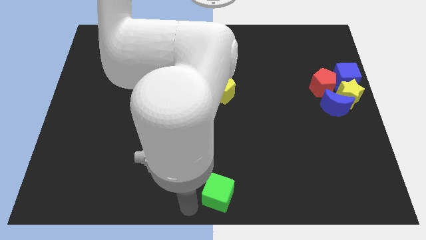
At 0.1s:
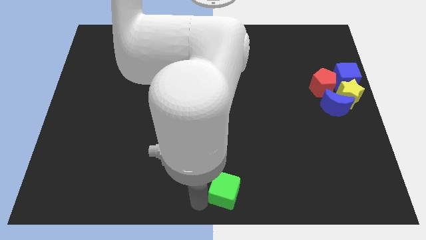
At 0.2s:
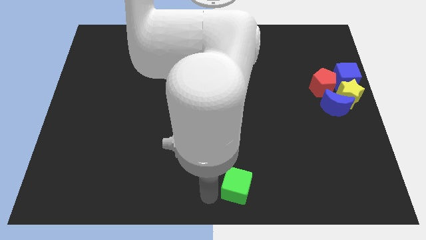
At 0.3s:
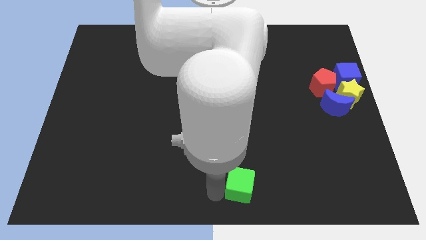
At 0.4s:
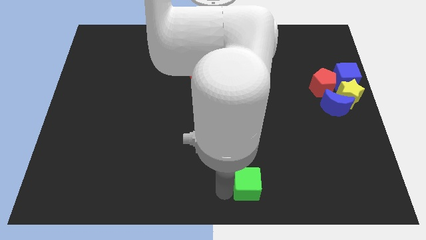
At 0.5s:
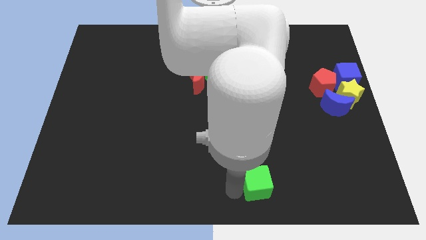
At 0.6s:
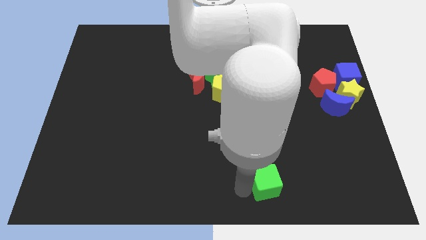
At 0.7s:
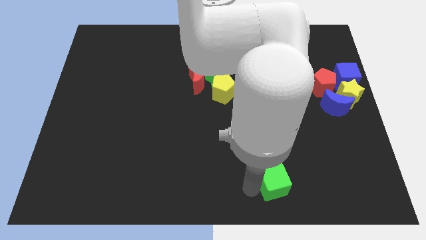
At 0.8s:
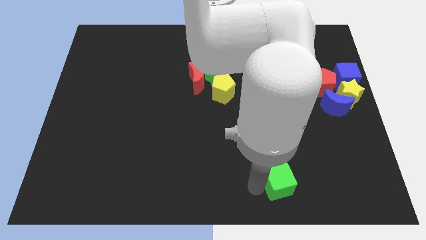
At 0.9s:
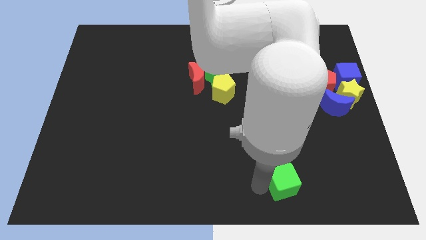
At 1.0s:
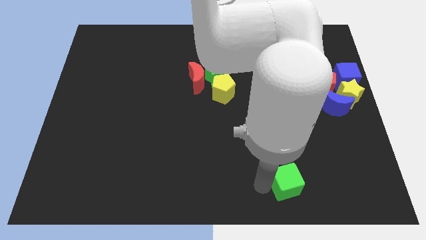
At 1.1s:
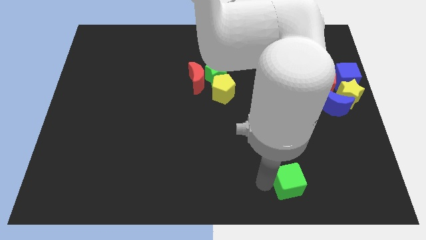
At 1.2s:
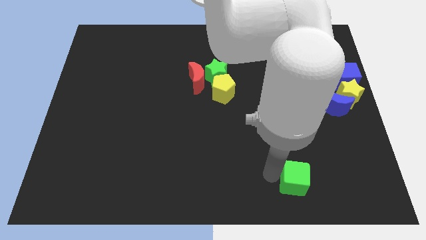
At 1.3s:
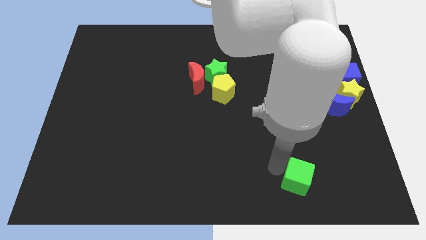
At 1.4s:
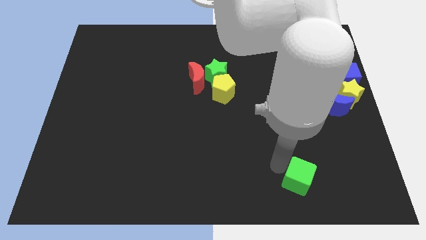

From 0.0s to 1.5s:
push the green cube to the right side of the table

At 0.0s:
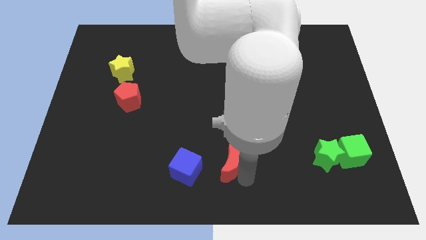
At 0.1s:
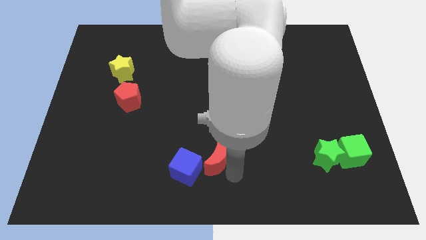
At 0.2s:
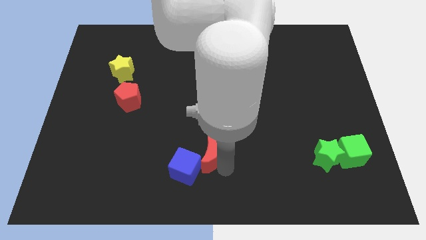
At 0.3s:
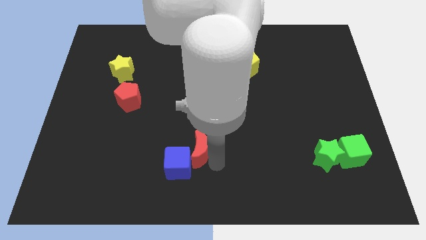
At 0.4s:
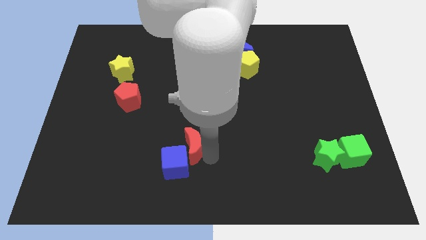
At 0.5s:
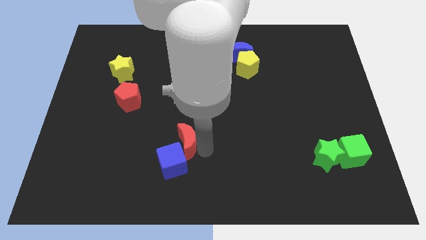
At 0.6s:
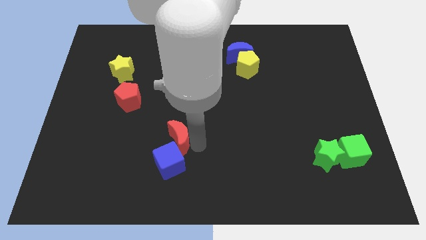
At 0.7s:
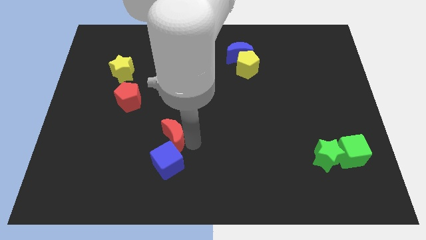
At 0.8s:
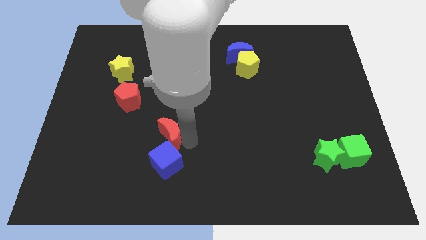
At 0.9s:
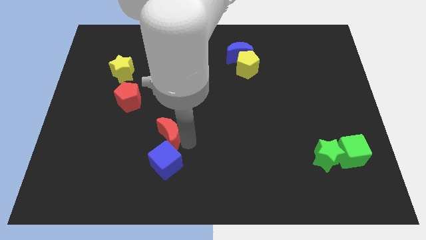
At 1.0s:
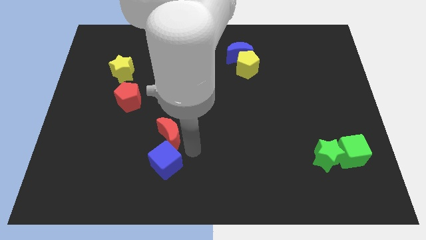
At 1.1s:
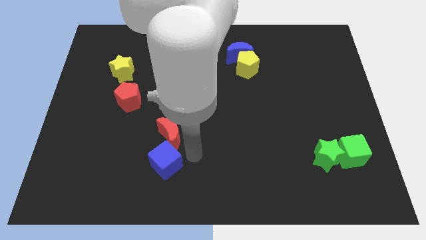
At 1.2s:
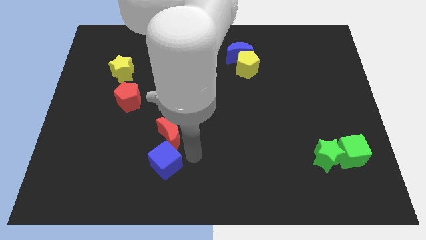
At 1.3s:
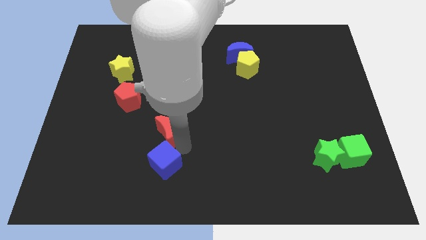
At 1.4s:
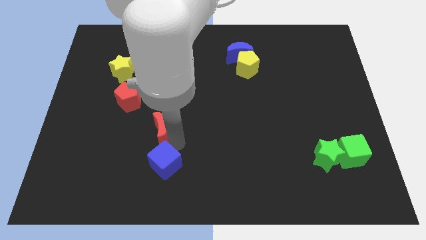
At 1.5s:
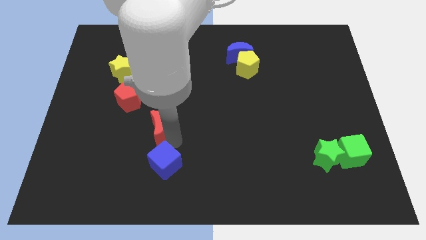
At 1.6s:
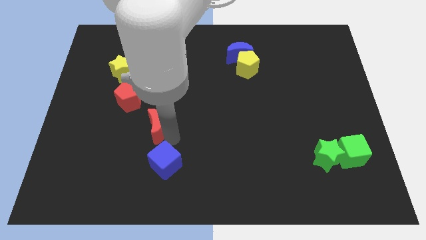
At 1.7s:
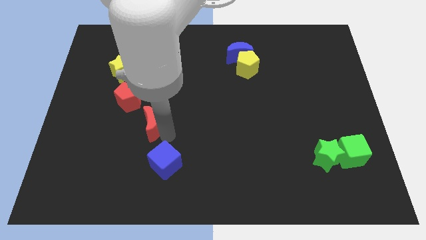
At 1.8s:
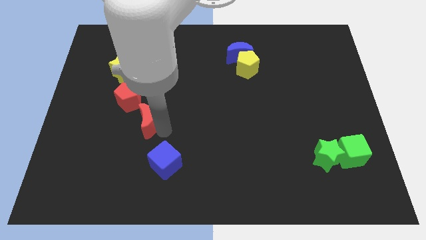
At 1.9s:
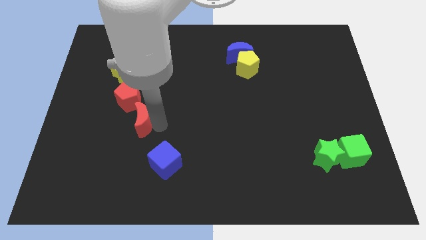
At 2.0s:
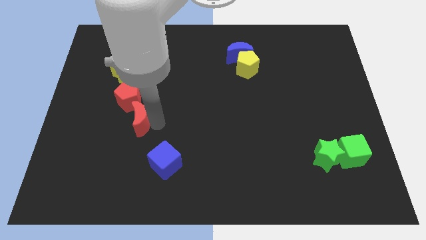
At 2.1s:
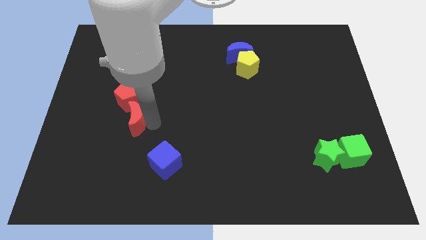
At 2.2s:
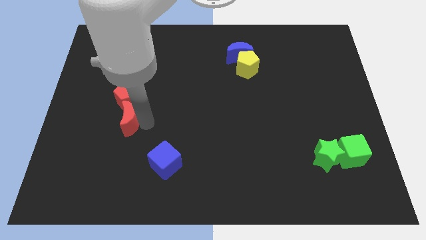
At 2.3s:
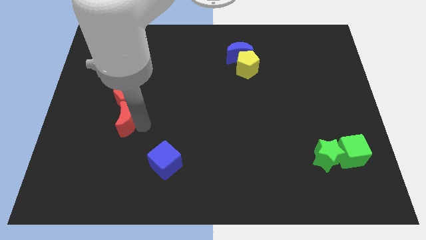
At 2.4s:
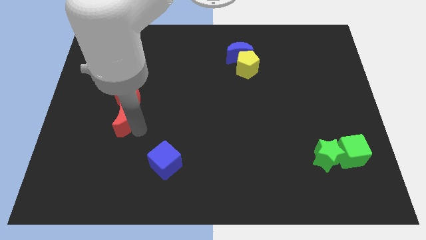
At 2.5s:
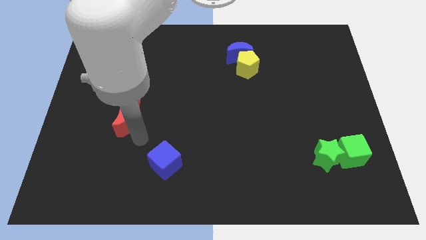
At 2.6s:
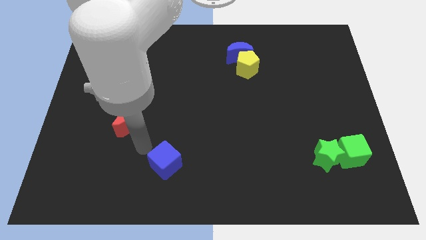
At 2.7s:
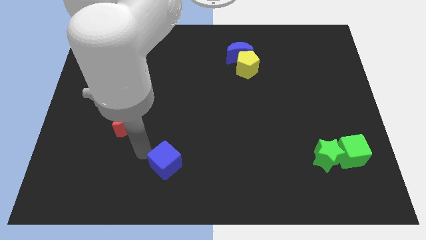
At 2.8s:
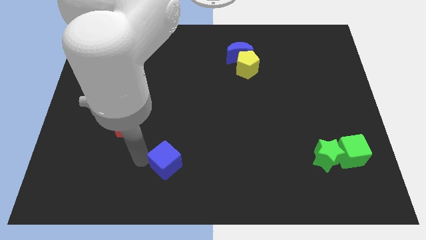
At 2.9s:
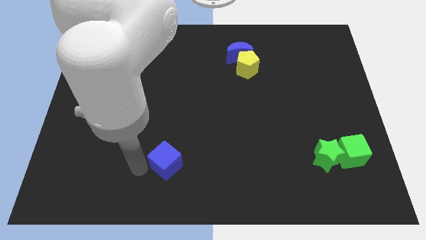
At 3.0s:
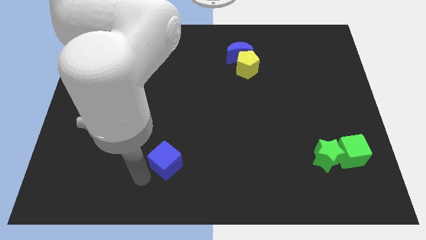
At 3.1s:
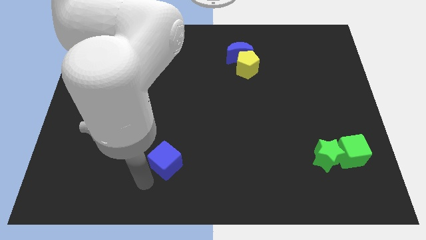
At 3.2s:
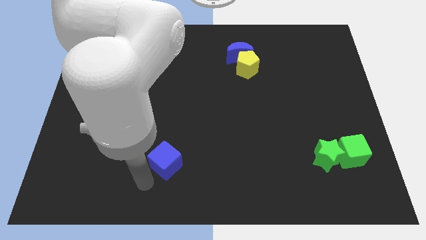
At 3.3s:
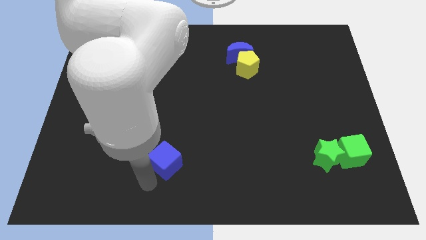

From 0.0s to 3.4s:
place the red crescent below the red pentagon

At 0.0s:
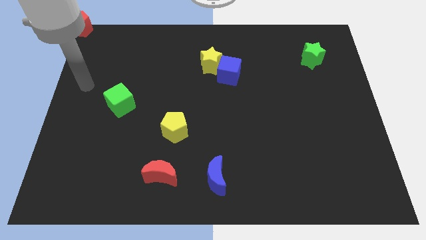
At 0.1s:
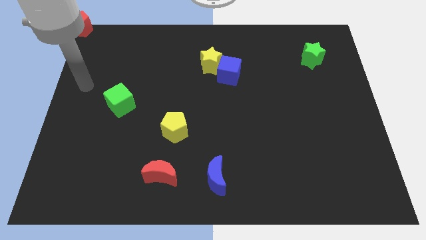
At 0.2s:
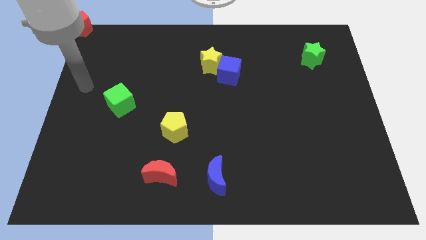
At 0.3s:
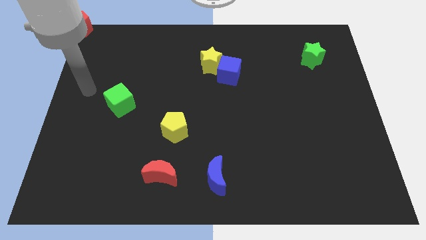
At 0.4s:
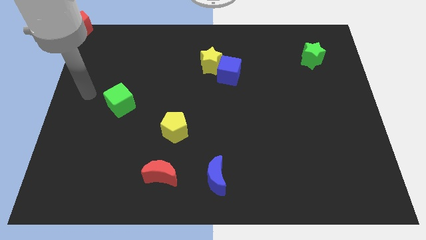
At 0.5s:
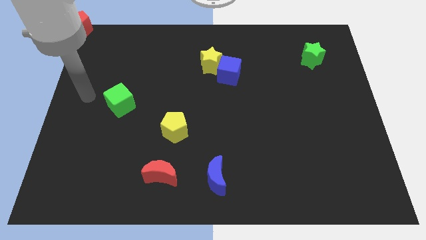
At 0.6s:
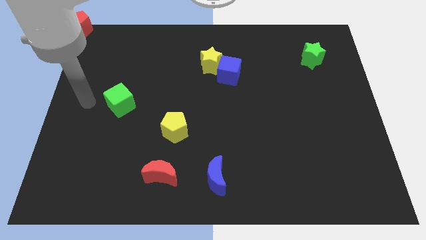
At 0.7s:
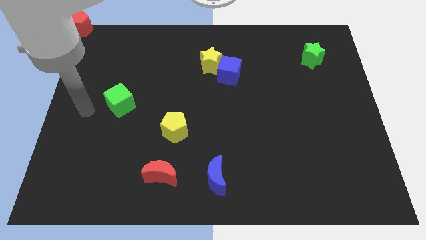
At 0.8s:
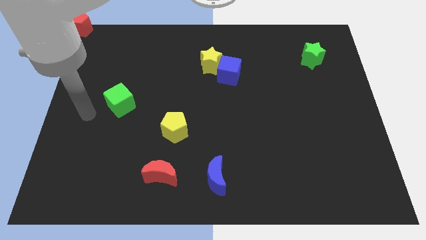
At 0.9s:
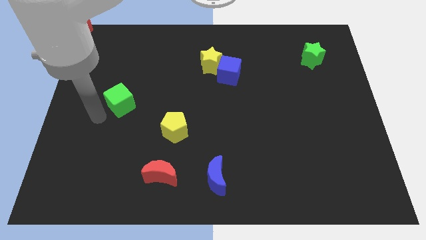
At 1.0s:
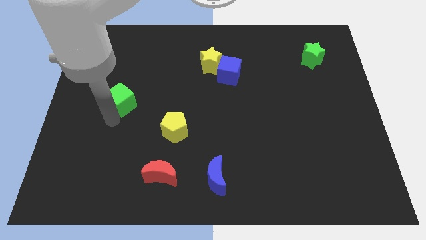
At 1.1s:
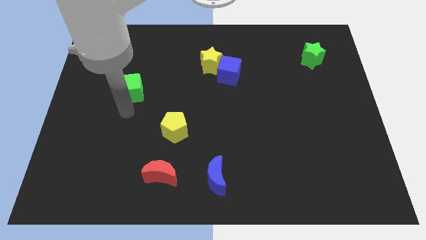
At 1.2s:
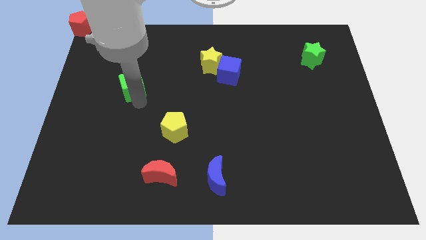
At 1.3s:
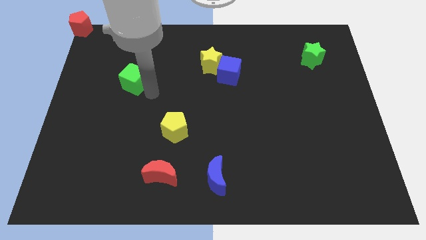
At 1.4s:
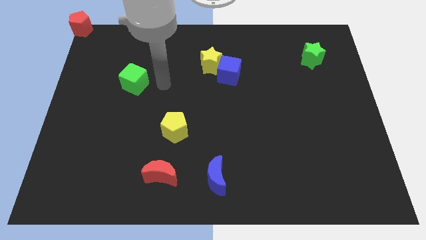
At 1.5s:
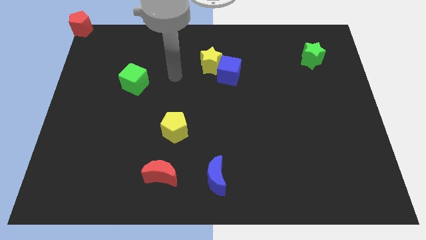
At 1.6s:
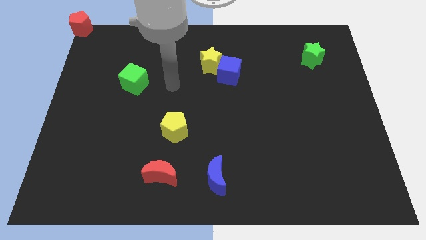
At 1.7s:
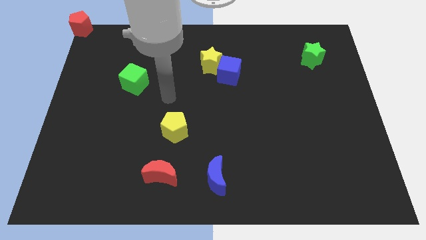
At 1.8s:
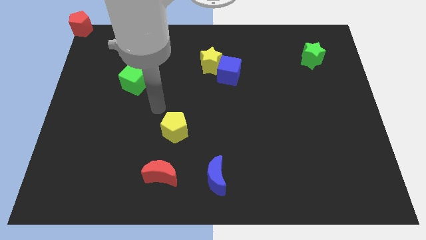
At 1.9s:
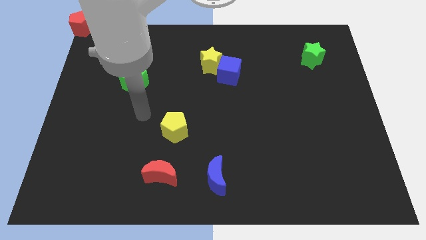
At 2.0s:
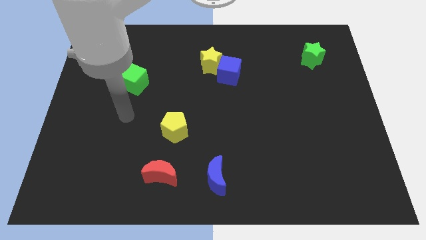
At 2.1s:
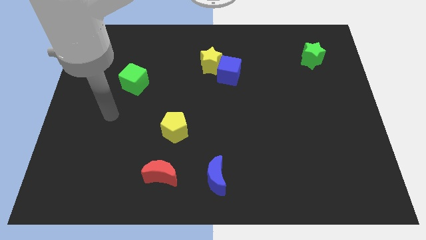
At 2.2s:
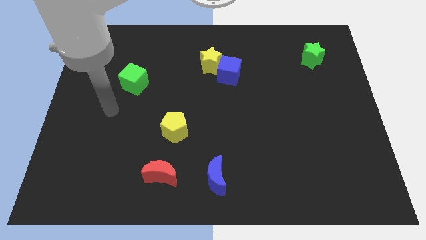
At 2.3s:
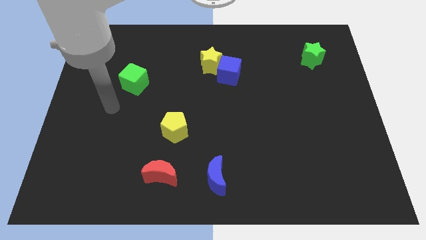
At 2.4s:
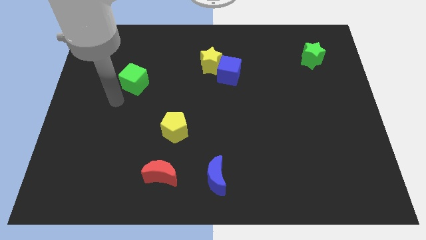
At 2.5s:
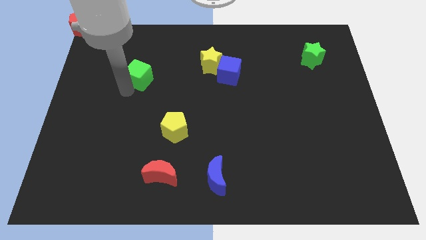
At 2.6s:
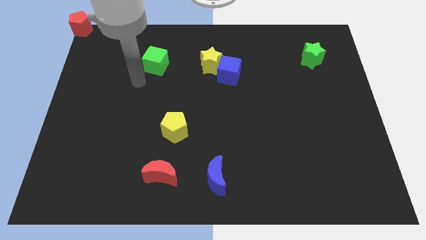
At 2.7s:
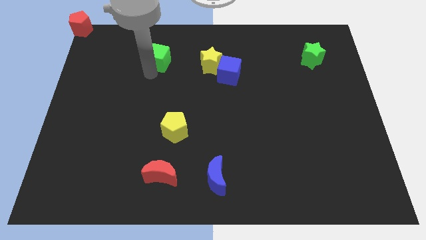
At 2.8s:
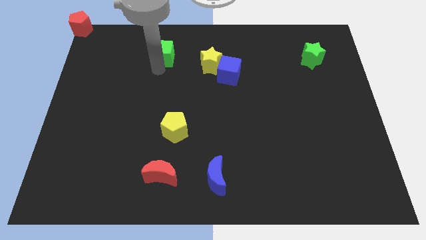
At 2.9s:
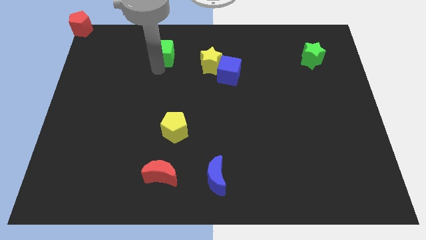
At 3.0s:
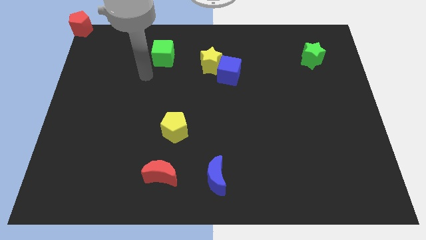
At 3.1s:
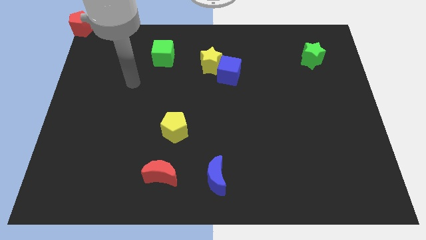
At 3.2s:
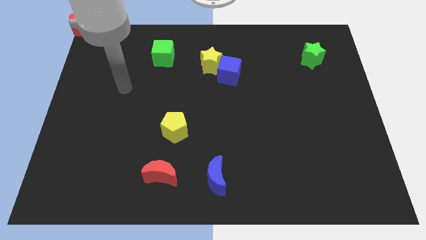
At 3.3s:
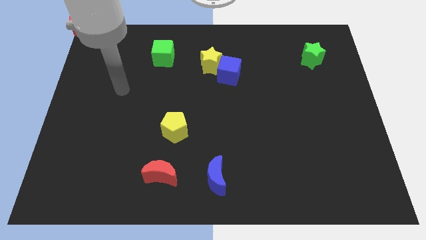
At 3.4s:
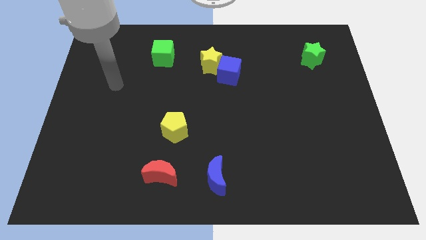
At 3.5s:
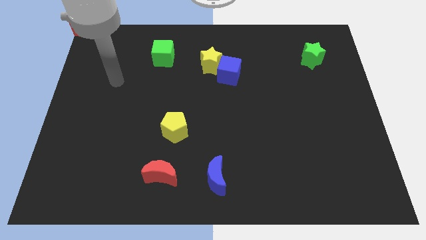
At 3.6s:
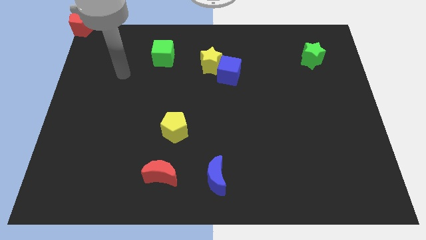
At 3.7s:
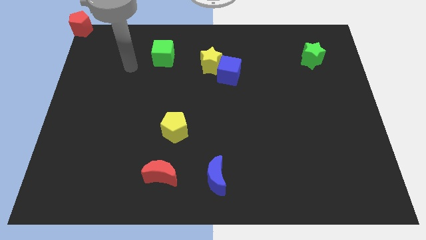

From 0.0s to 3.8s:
push the green cube to the left side of the yellow star

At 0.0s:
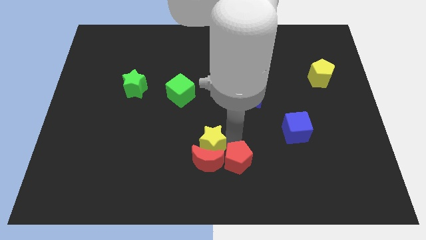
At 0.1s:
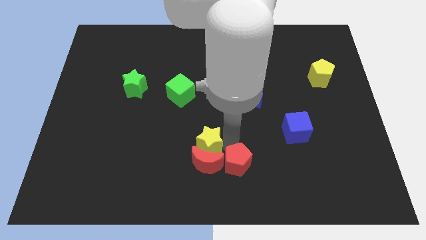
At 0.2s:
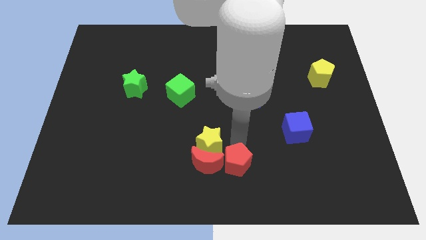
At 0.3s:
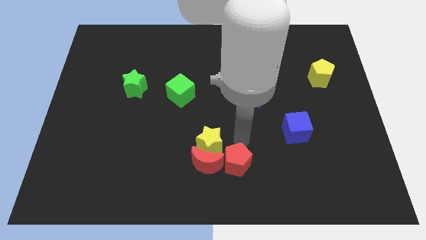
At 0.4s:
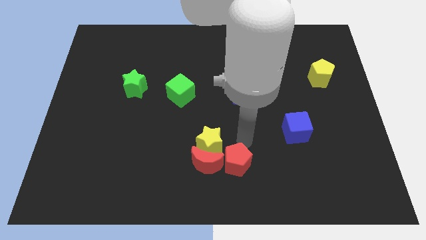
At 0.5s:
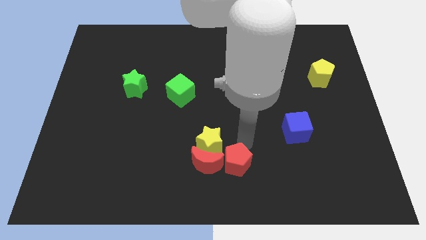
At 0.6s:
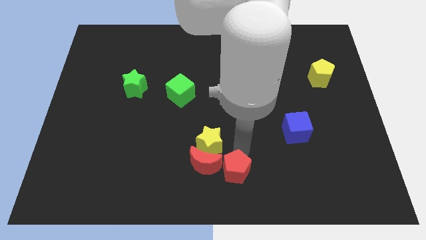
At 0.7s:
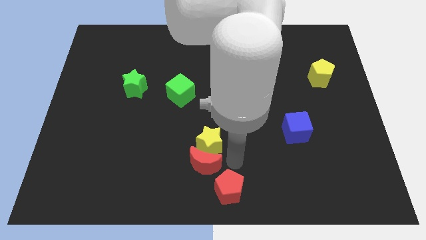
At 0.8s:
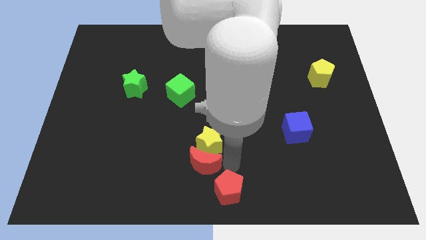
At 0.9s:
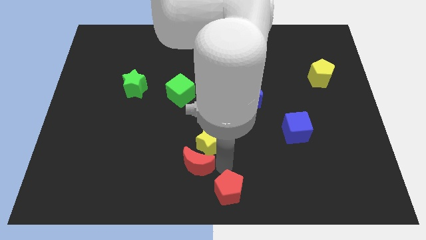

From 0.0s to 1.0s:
move the red pentagon towards the bottom center of the board
